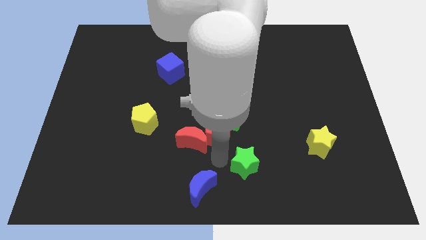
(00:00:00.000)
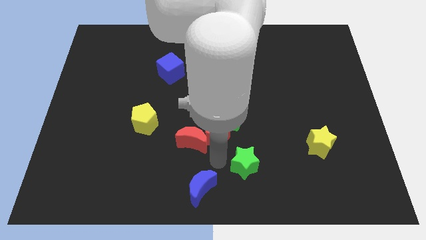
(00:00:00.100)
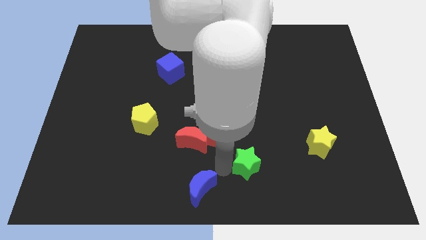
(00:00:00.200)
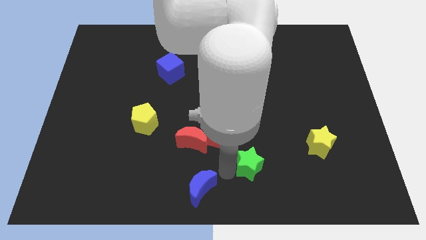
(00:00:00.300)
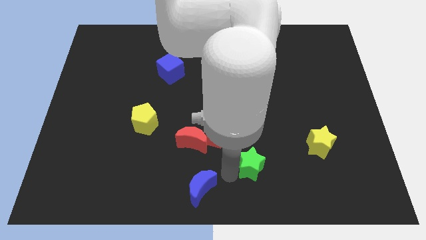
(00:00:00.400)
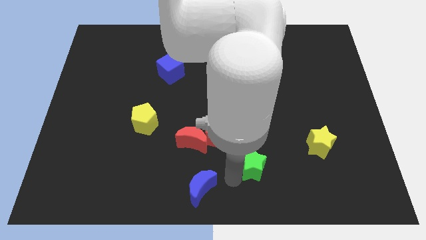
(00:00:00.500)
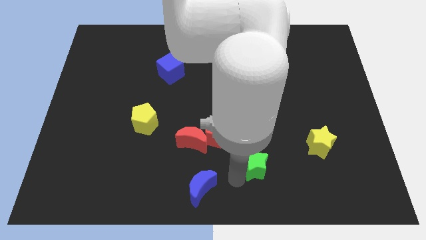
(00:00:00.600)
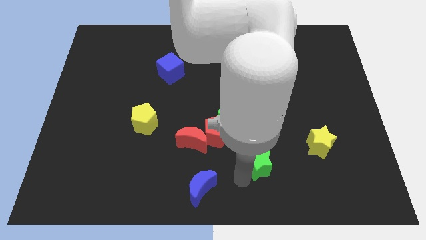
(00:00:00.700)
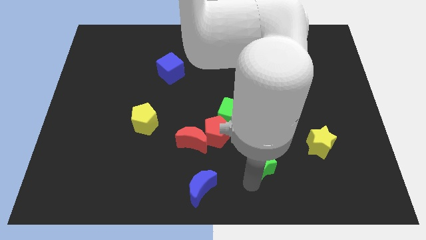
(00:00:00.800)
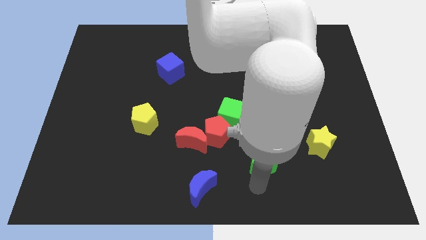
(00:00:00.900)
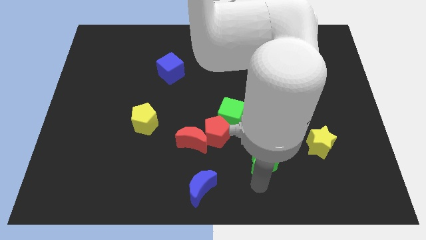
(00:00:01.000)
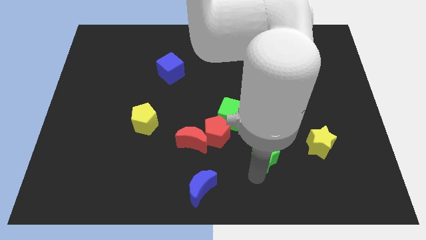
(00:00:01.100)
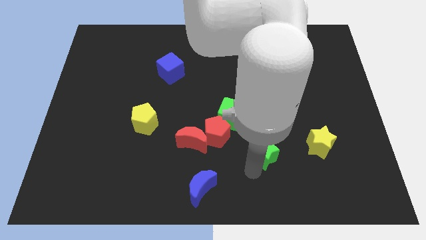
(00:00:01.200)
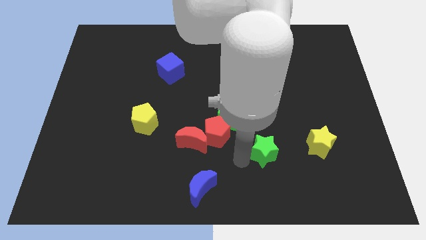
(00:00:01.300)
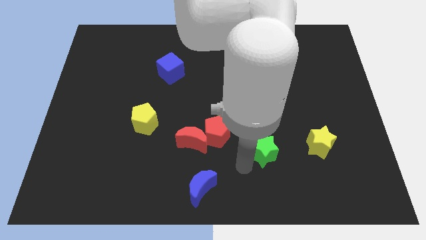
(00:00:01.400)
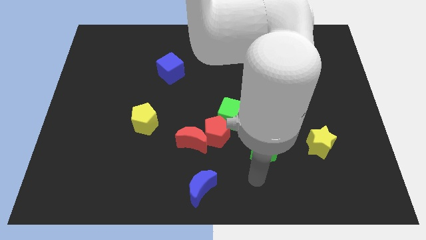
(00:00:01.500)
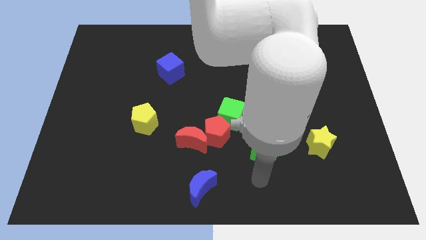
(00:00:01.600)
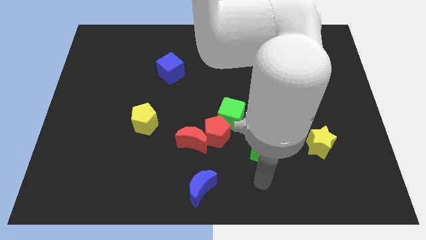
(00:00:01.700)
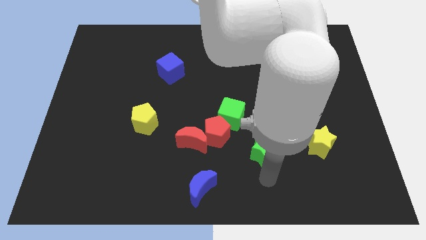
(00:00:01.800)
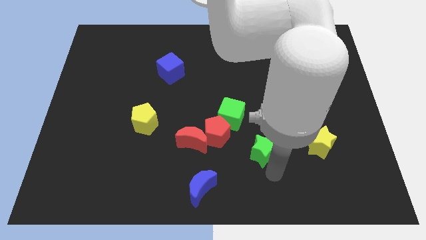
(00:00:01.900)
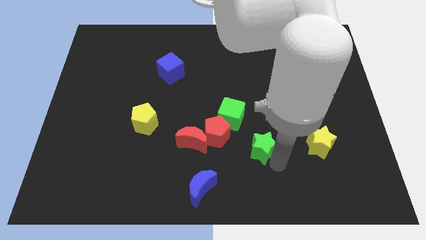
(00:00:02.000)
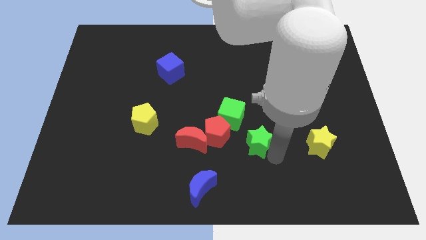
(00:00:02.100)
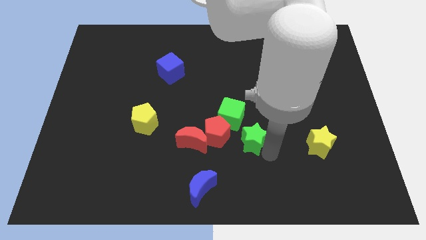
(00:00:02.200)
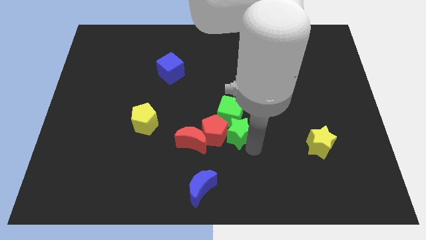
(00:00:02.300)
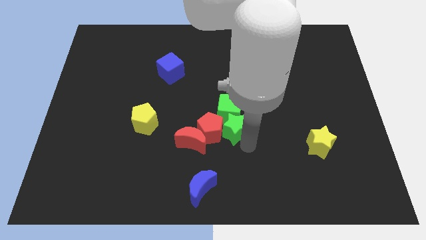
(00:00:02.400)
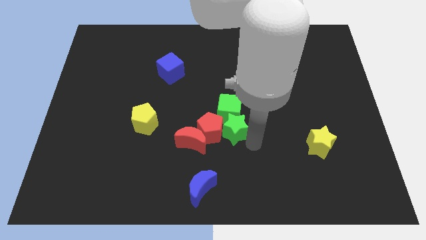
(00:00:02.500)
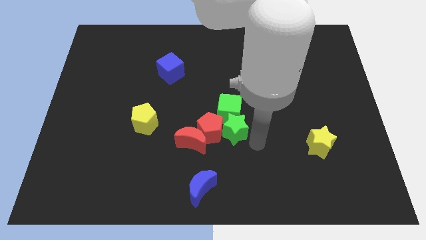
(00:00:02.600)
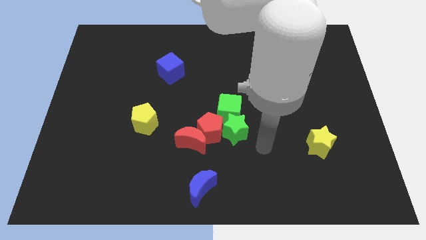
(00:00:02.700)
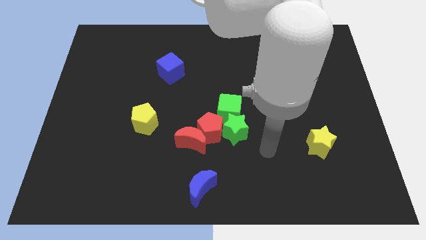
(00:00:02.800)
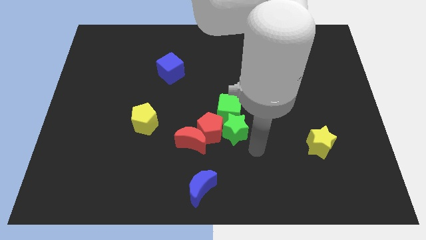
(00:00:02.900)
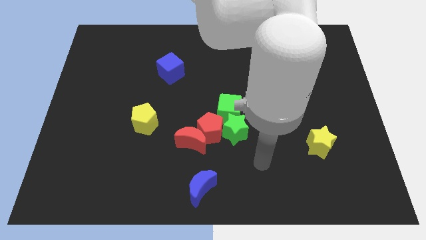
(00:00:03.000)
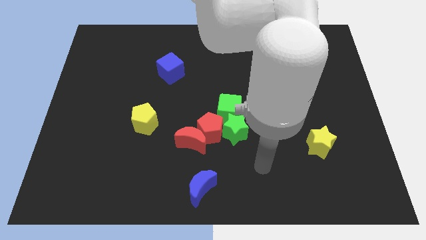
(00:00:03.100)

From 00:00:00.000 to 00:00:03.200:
slide the green star parallel right to the red pentagon

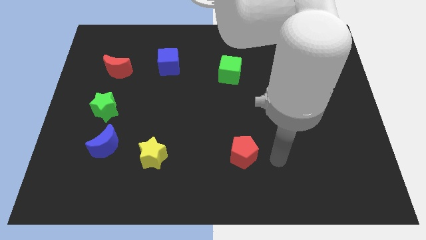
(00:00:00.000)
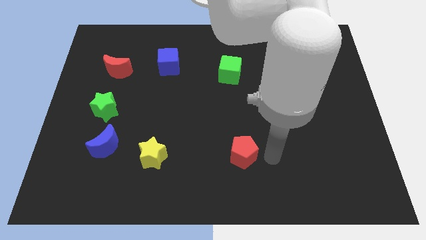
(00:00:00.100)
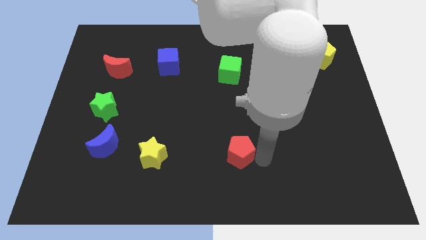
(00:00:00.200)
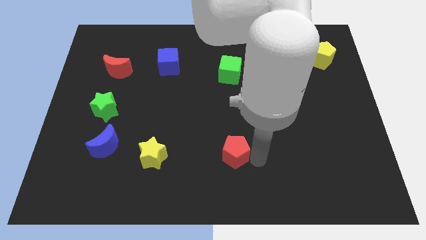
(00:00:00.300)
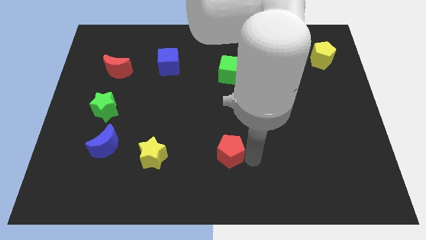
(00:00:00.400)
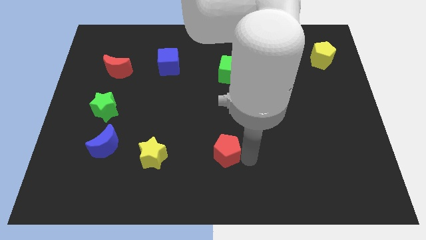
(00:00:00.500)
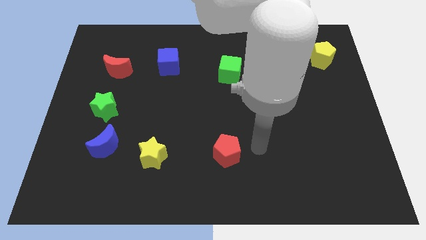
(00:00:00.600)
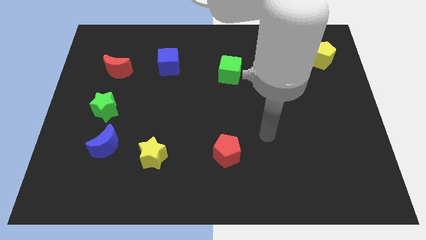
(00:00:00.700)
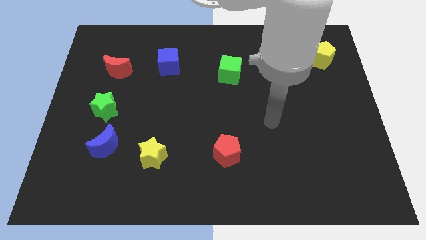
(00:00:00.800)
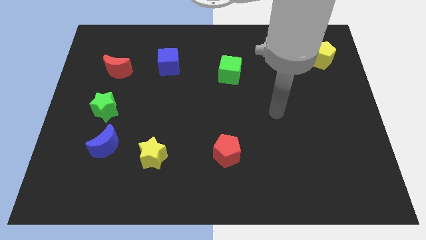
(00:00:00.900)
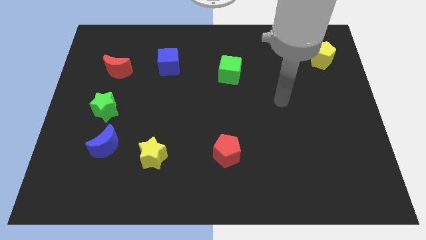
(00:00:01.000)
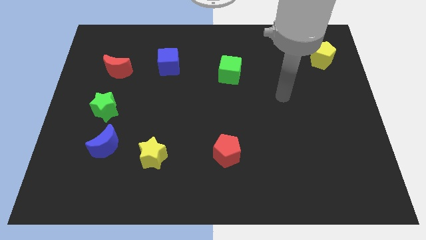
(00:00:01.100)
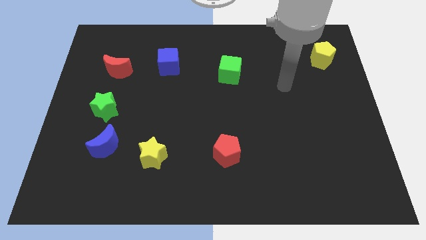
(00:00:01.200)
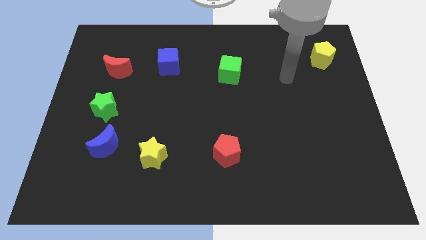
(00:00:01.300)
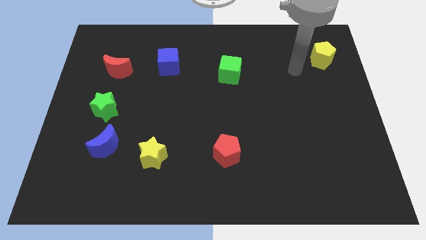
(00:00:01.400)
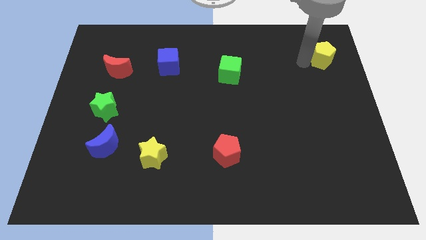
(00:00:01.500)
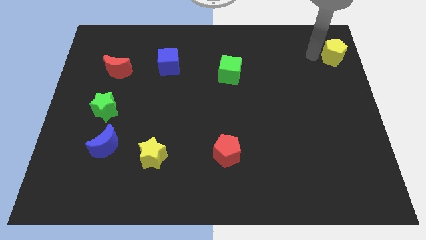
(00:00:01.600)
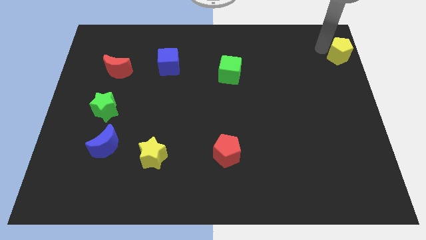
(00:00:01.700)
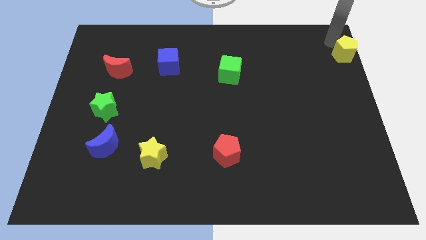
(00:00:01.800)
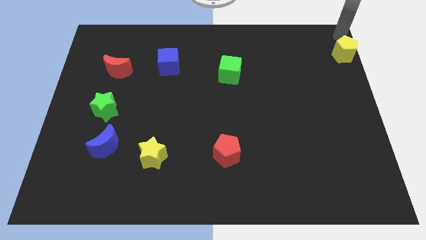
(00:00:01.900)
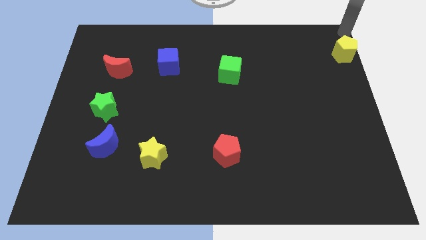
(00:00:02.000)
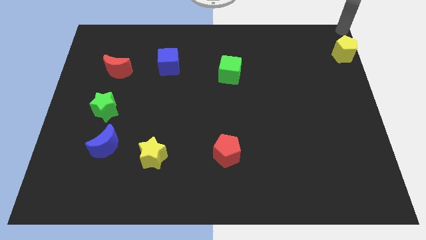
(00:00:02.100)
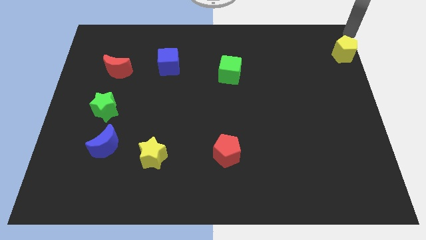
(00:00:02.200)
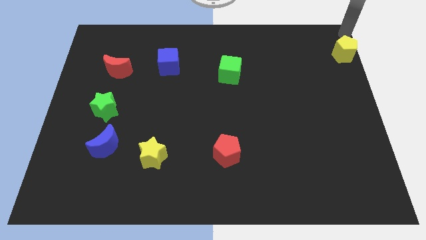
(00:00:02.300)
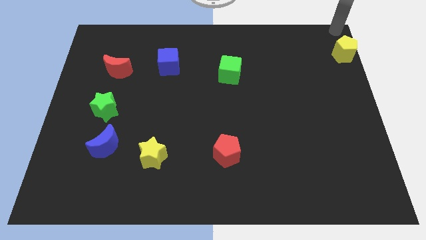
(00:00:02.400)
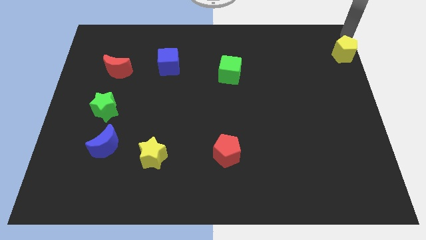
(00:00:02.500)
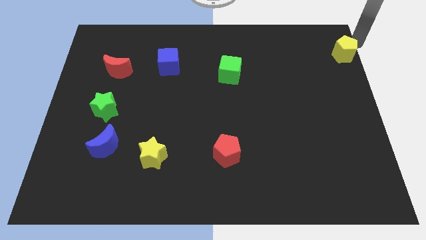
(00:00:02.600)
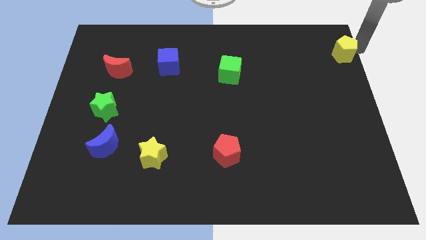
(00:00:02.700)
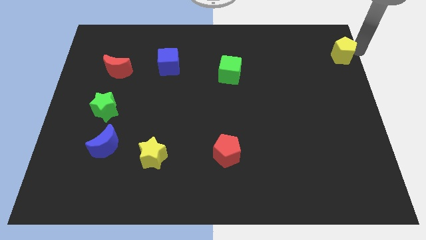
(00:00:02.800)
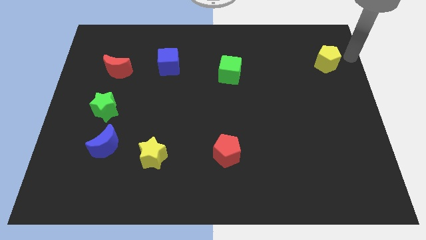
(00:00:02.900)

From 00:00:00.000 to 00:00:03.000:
place the yellow pentagon and red pentagon diagonally

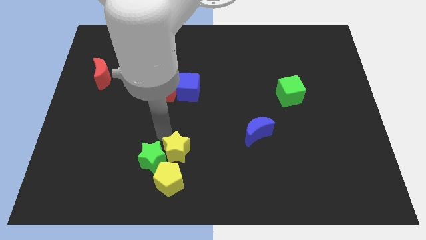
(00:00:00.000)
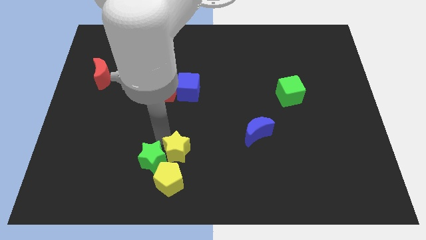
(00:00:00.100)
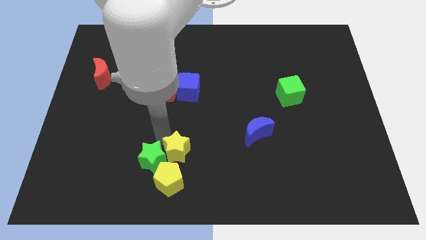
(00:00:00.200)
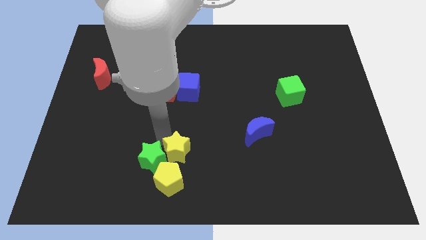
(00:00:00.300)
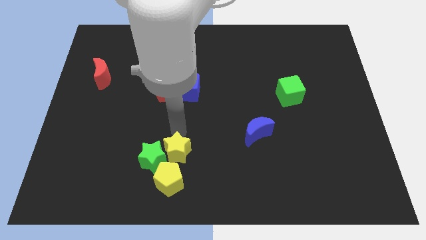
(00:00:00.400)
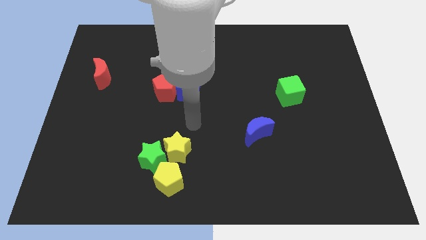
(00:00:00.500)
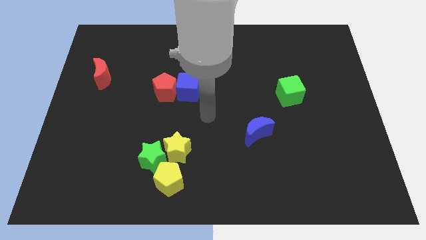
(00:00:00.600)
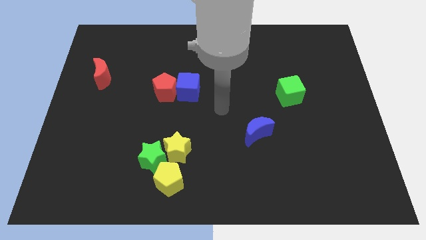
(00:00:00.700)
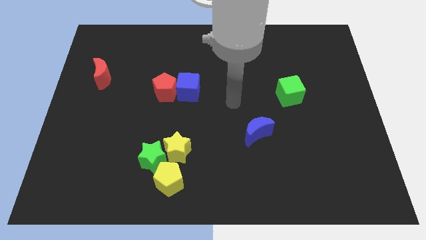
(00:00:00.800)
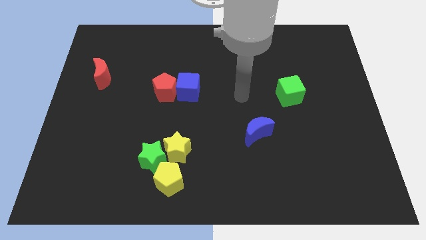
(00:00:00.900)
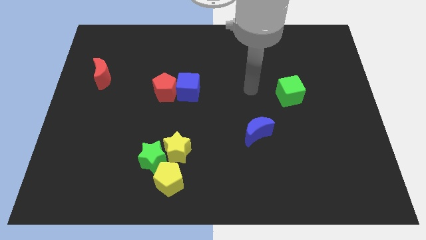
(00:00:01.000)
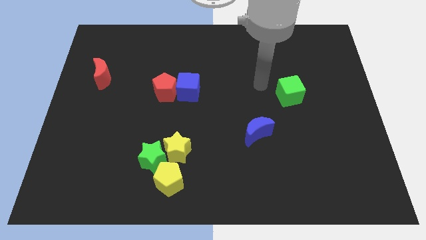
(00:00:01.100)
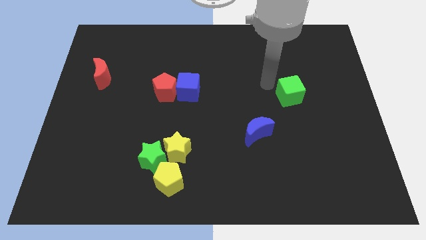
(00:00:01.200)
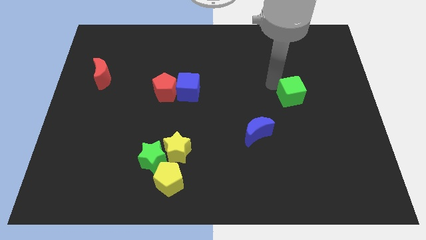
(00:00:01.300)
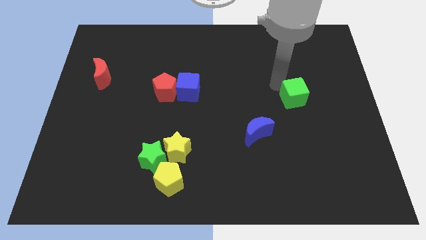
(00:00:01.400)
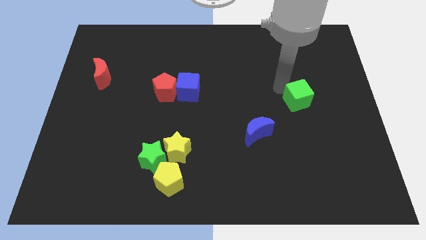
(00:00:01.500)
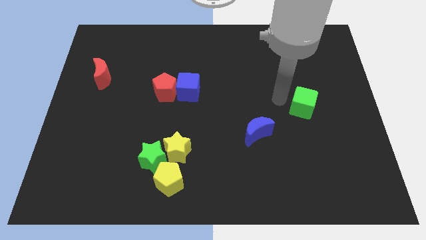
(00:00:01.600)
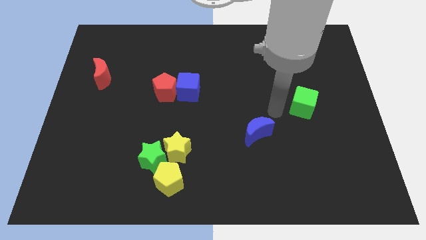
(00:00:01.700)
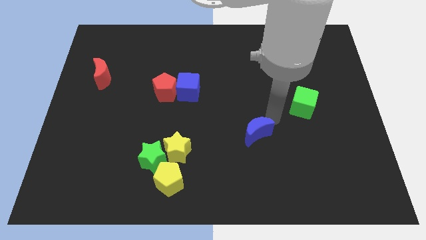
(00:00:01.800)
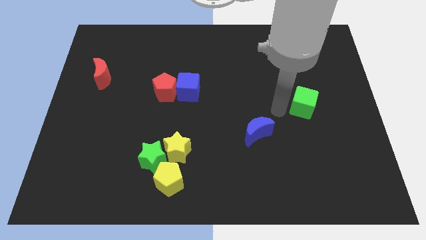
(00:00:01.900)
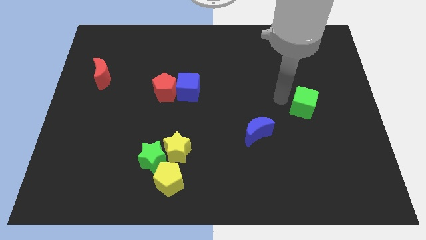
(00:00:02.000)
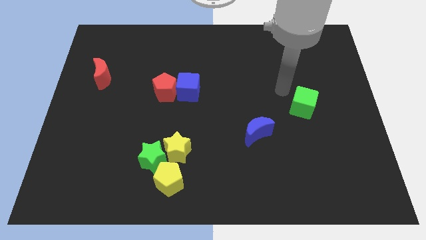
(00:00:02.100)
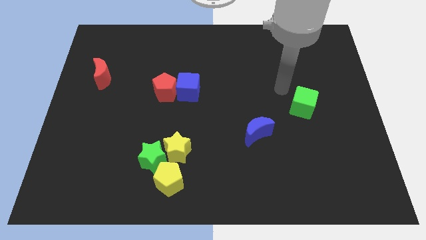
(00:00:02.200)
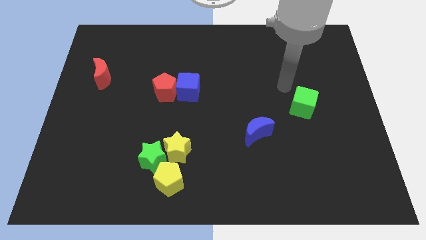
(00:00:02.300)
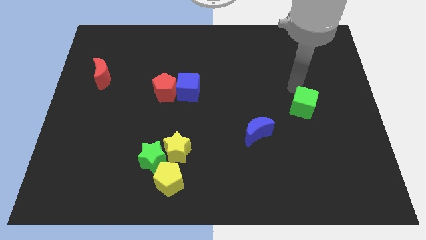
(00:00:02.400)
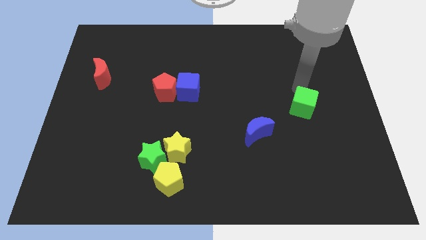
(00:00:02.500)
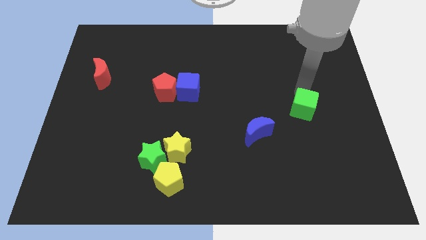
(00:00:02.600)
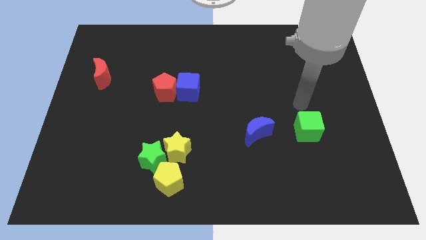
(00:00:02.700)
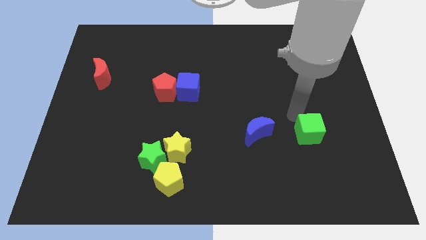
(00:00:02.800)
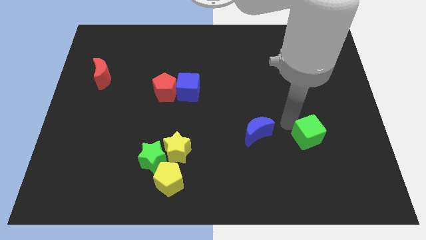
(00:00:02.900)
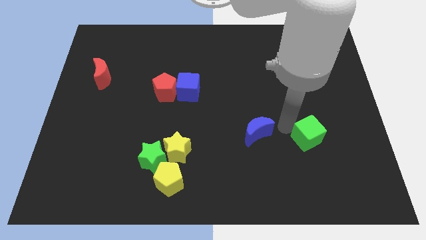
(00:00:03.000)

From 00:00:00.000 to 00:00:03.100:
place green cube to the right of blue moon
